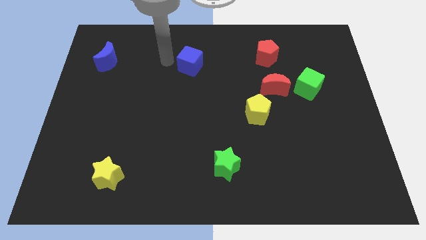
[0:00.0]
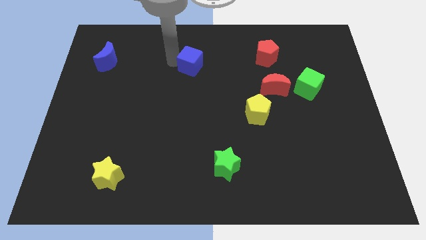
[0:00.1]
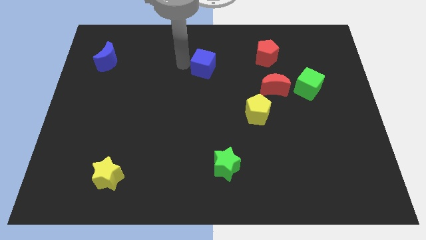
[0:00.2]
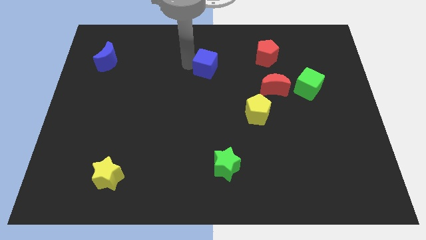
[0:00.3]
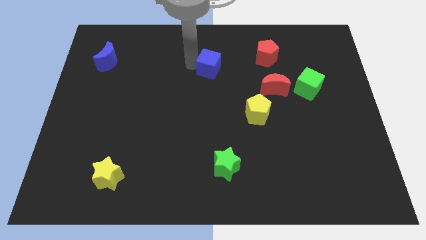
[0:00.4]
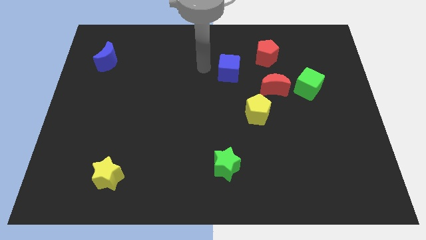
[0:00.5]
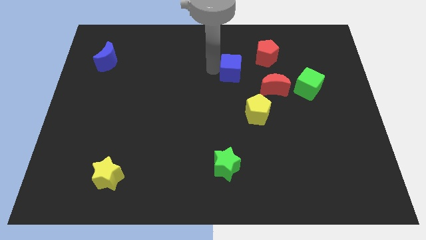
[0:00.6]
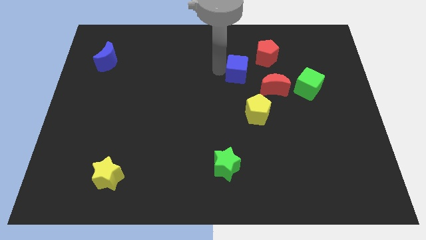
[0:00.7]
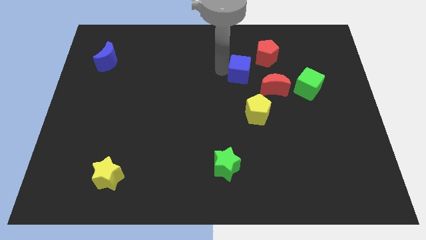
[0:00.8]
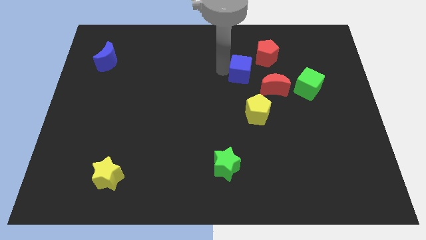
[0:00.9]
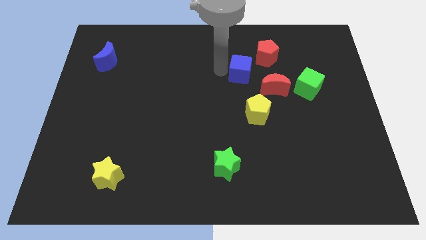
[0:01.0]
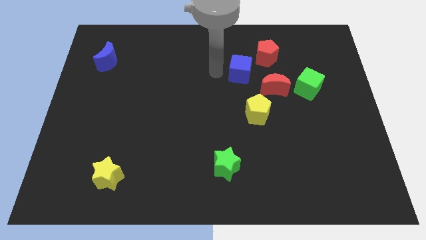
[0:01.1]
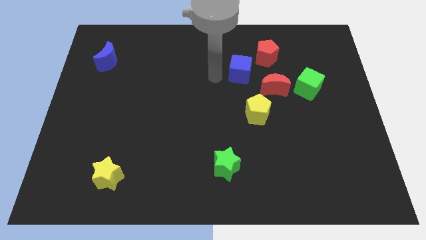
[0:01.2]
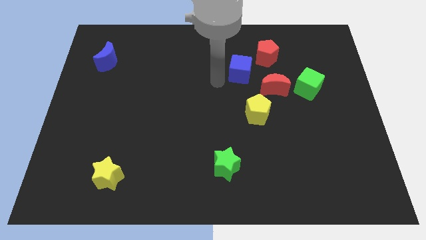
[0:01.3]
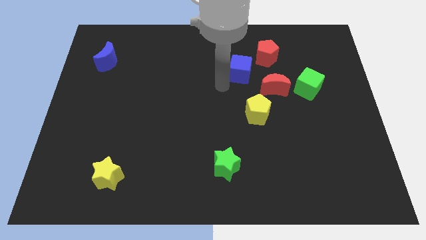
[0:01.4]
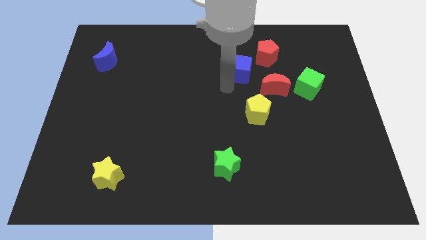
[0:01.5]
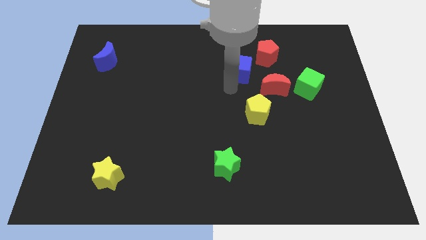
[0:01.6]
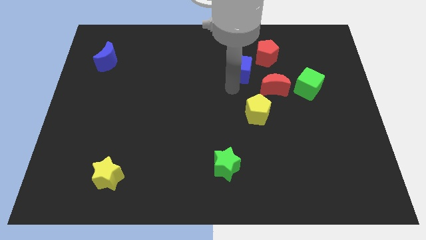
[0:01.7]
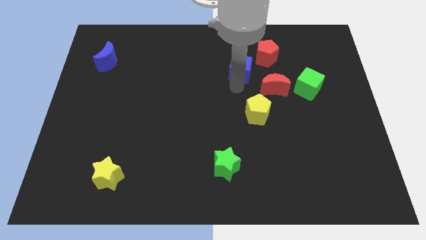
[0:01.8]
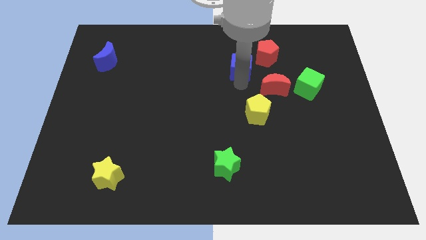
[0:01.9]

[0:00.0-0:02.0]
move the blue cube closer to the red crescent

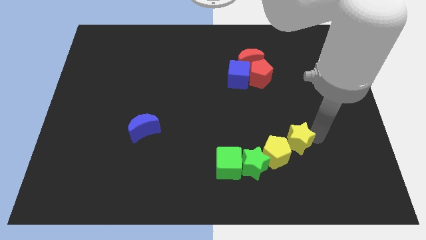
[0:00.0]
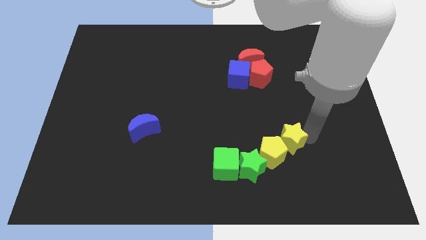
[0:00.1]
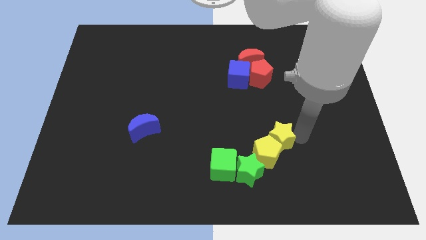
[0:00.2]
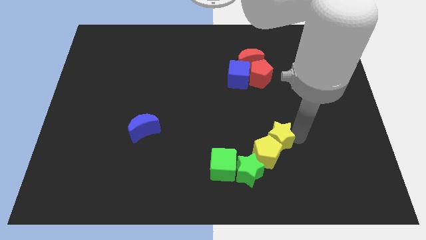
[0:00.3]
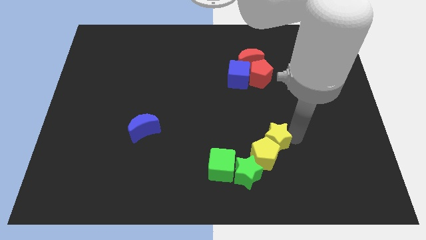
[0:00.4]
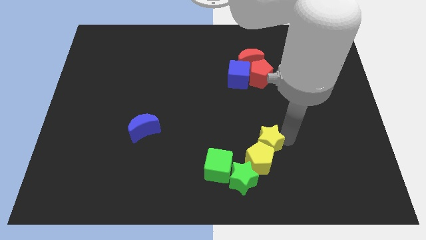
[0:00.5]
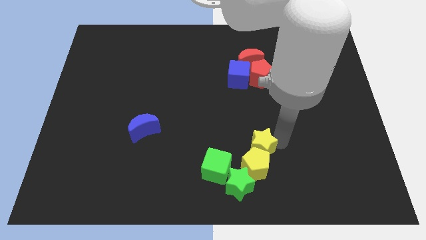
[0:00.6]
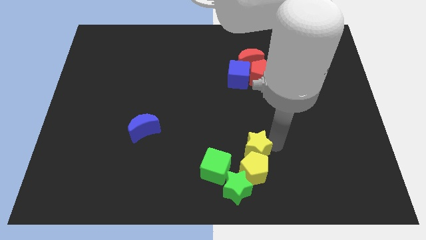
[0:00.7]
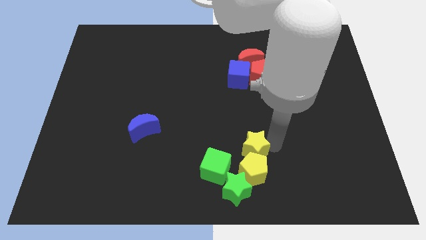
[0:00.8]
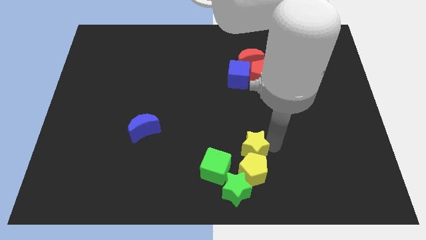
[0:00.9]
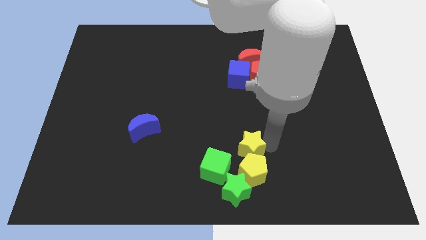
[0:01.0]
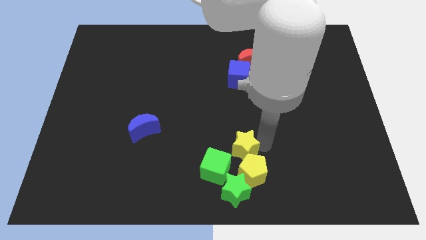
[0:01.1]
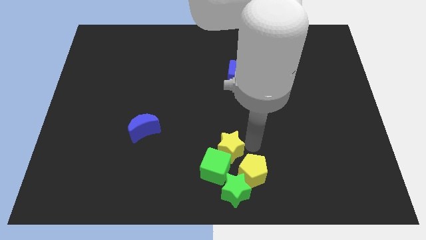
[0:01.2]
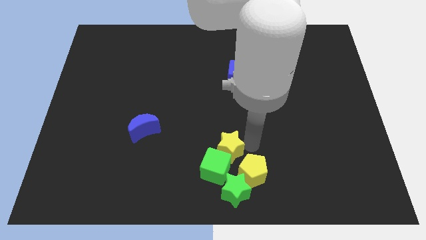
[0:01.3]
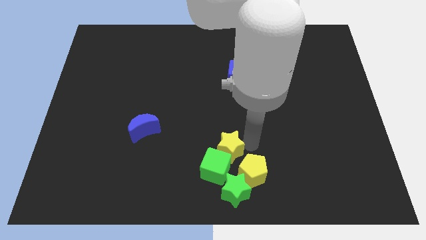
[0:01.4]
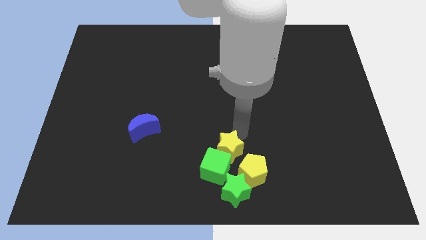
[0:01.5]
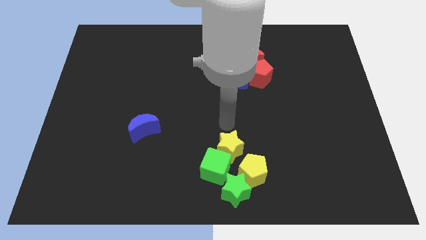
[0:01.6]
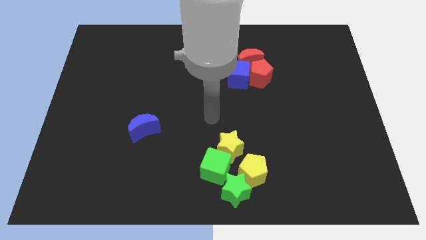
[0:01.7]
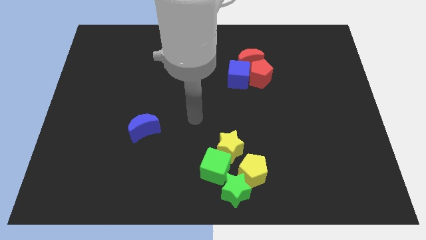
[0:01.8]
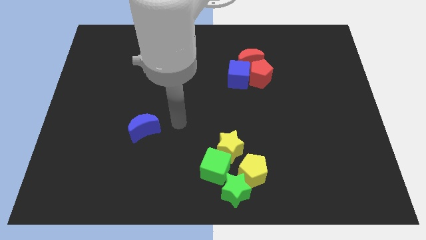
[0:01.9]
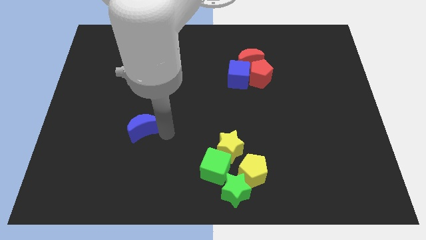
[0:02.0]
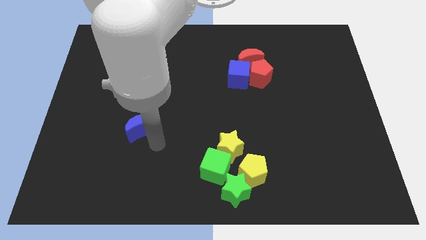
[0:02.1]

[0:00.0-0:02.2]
place yellow and green blocks at the bottom center

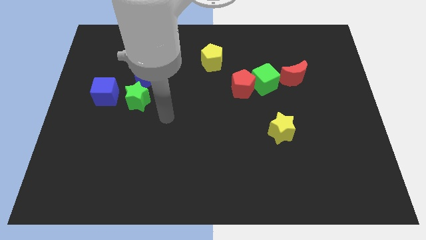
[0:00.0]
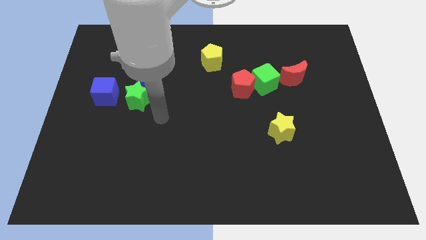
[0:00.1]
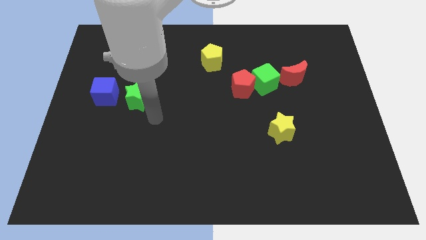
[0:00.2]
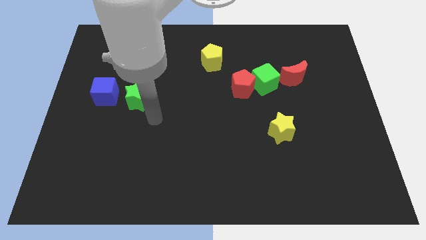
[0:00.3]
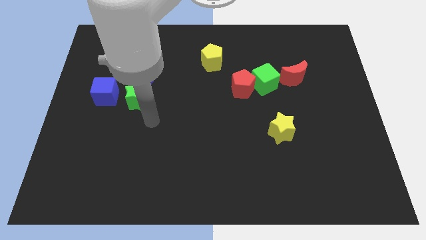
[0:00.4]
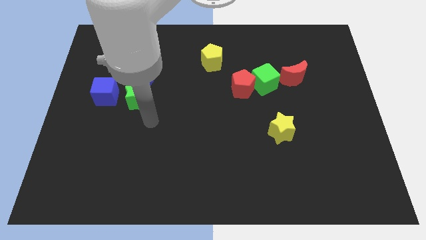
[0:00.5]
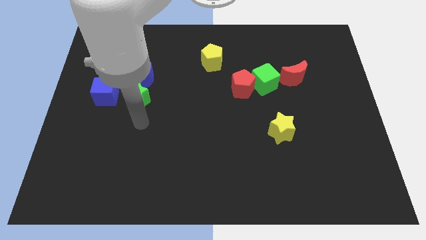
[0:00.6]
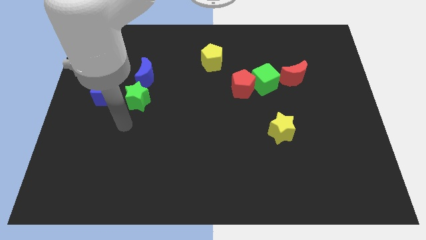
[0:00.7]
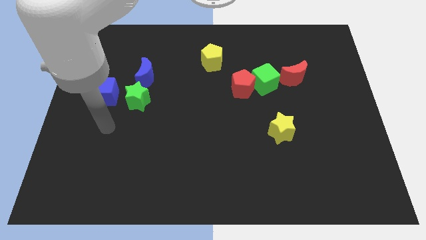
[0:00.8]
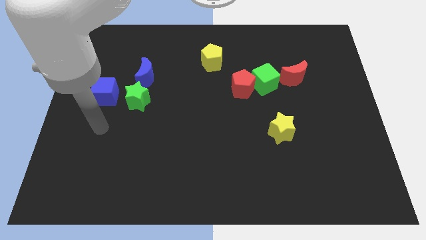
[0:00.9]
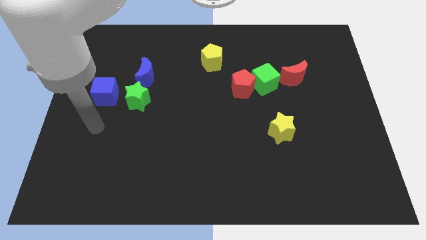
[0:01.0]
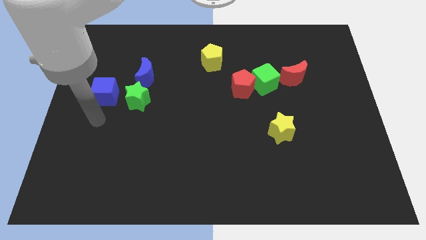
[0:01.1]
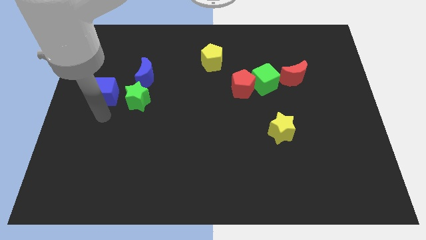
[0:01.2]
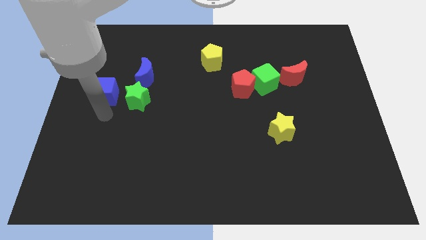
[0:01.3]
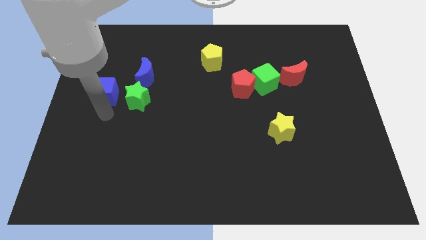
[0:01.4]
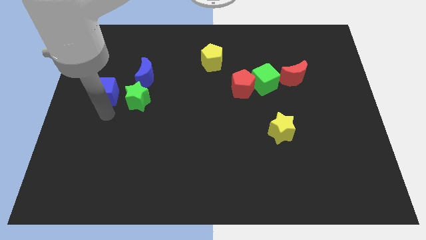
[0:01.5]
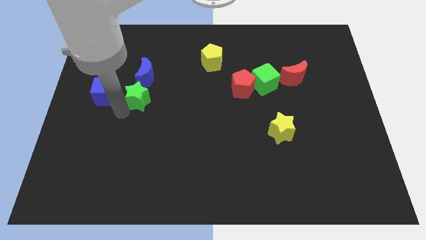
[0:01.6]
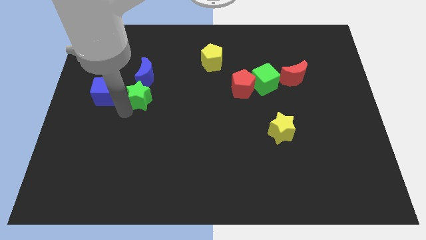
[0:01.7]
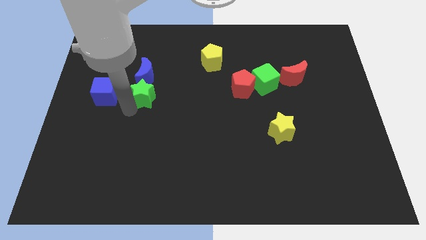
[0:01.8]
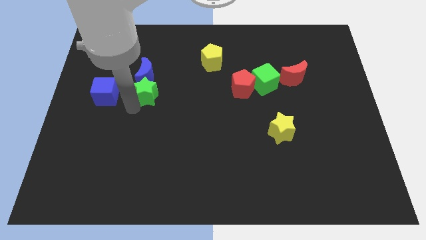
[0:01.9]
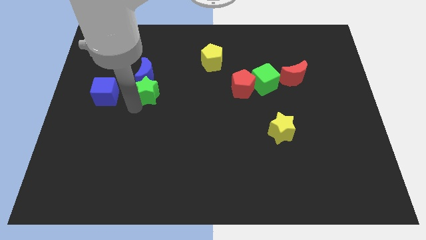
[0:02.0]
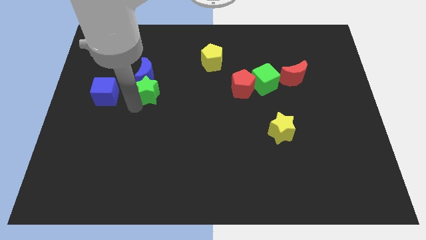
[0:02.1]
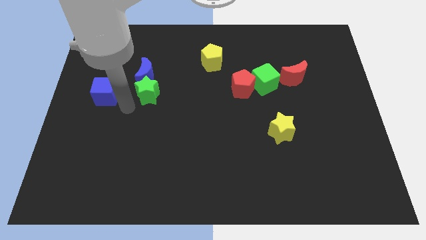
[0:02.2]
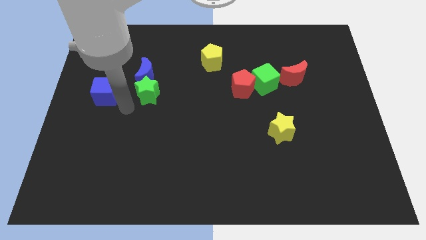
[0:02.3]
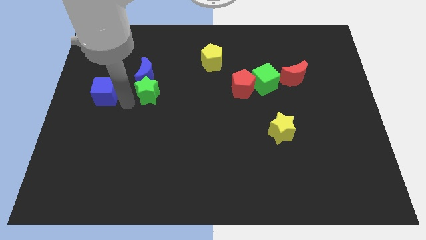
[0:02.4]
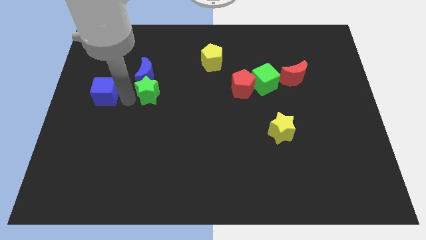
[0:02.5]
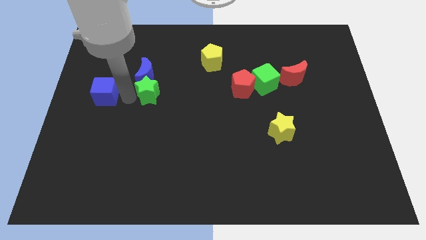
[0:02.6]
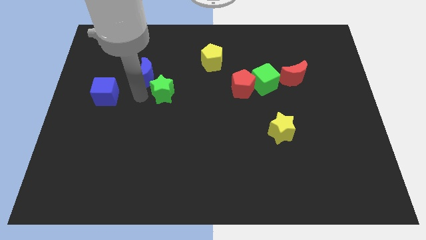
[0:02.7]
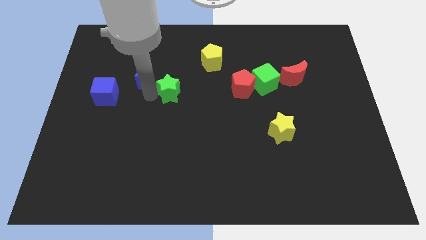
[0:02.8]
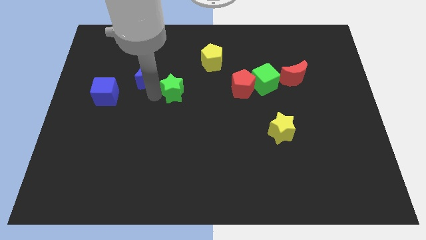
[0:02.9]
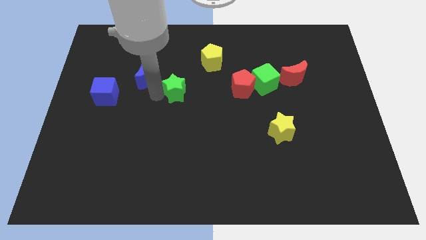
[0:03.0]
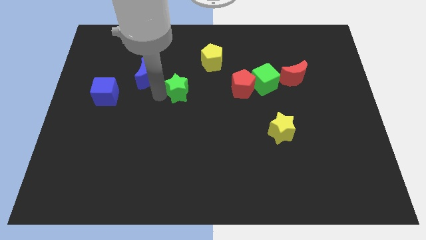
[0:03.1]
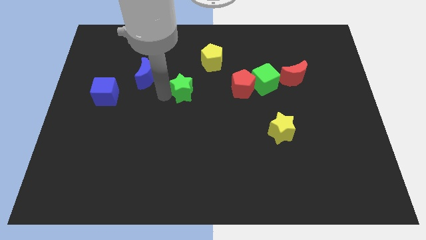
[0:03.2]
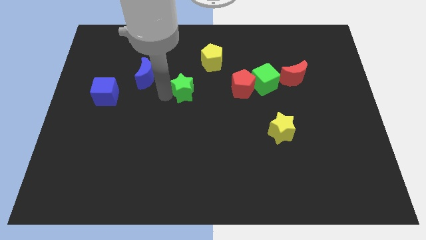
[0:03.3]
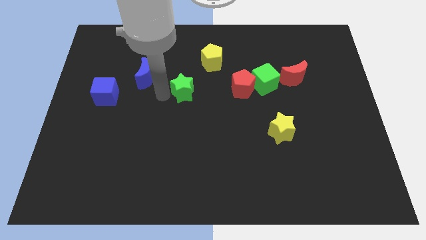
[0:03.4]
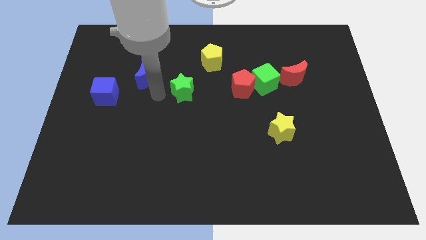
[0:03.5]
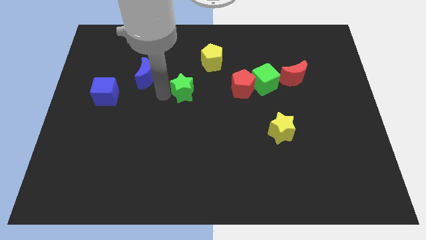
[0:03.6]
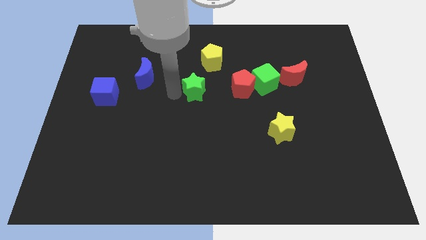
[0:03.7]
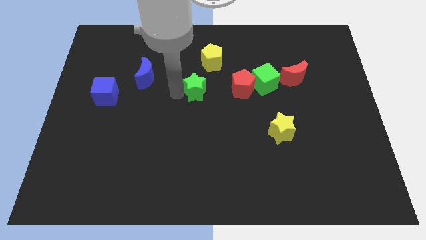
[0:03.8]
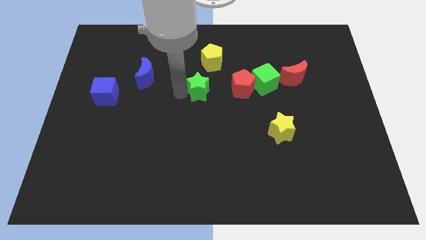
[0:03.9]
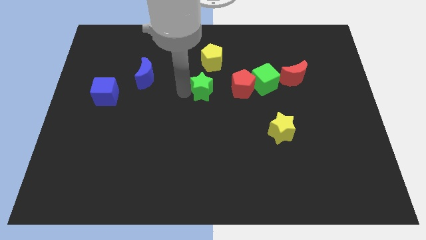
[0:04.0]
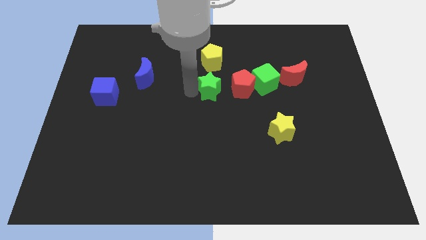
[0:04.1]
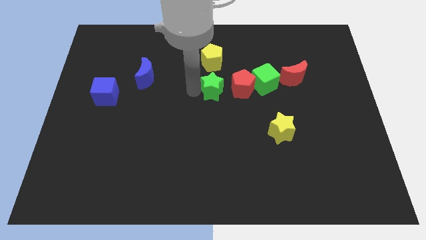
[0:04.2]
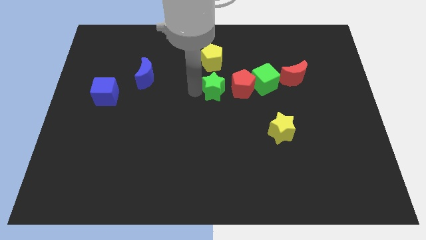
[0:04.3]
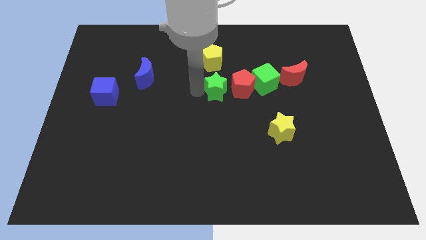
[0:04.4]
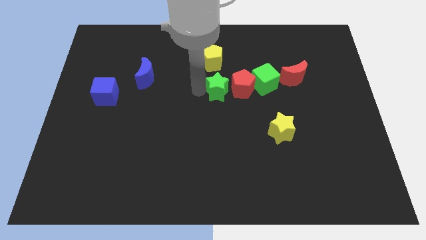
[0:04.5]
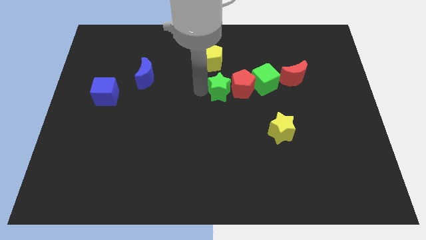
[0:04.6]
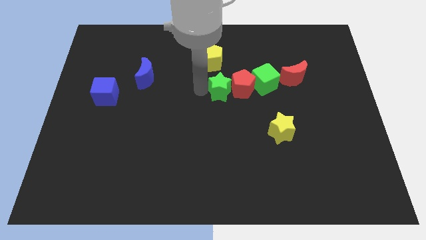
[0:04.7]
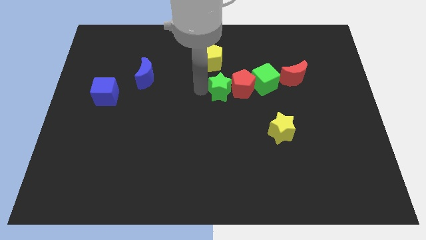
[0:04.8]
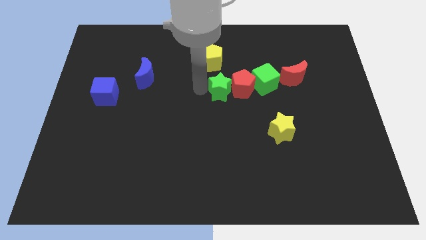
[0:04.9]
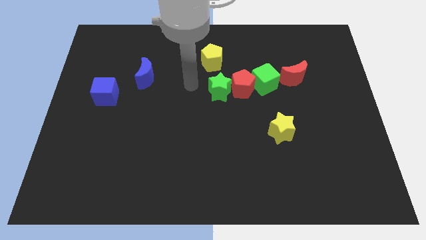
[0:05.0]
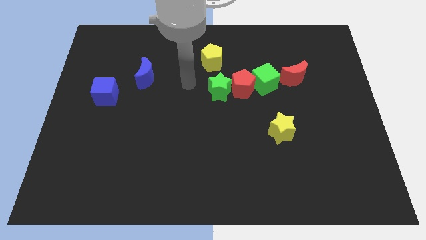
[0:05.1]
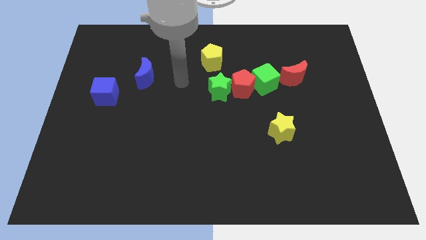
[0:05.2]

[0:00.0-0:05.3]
place the green star left to the red pentagon to form a diagonal line
